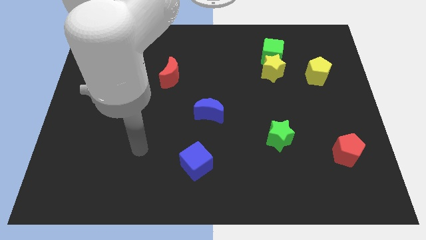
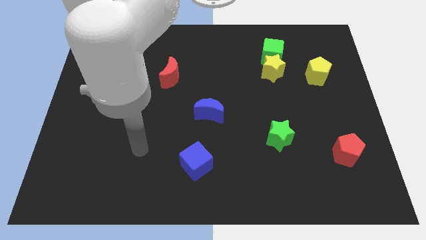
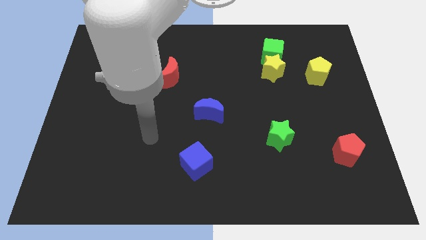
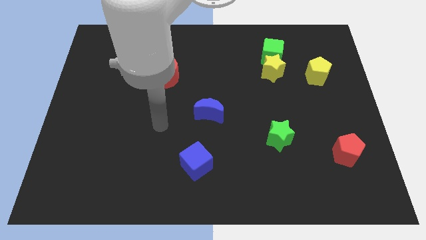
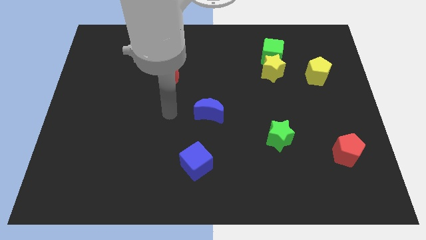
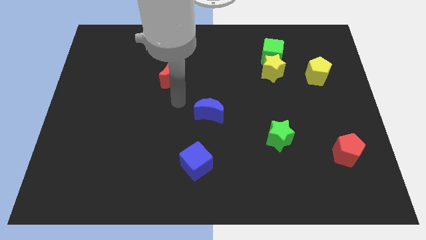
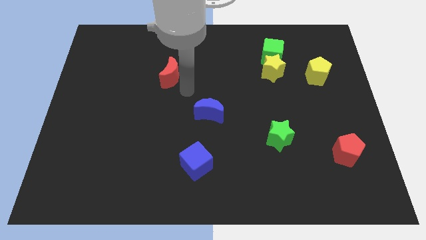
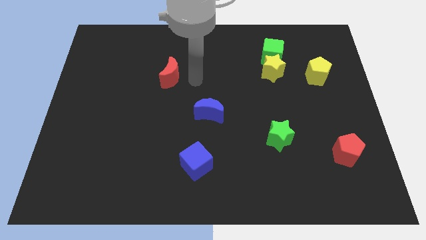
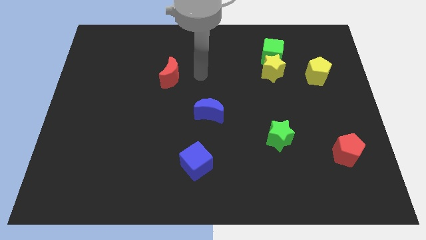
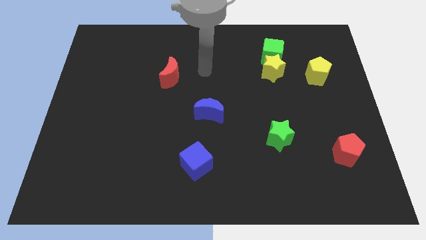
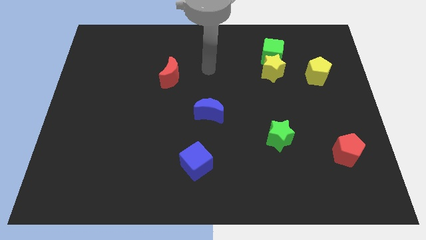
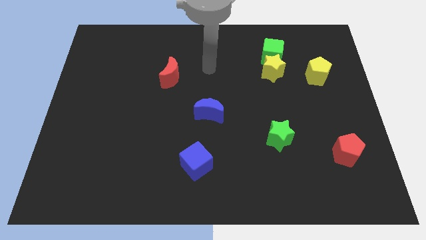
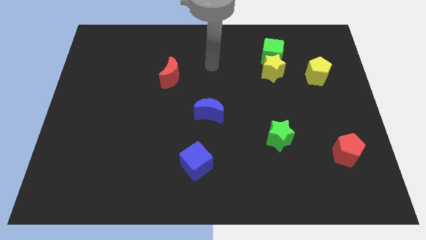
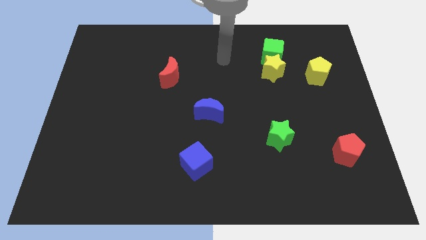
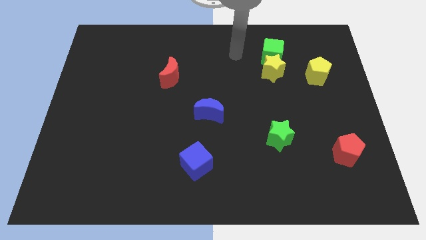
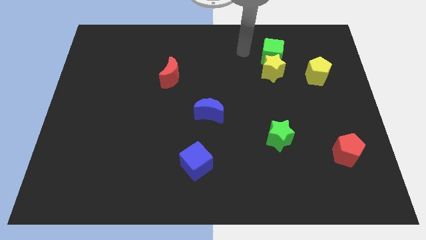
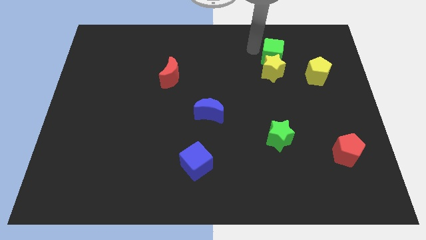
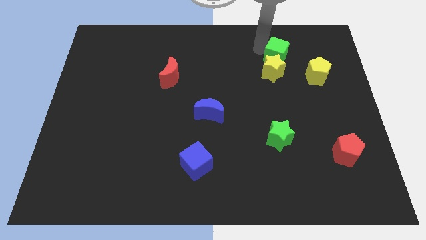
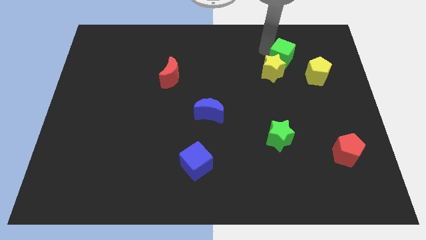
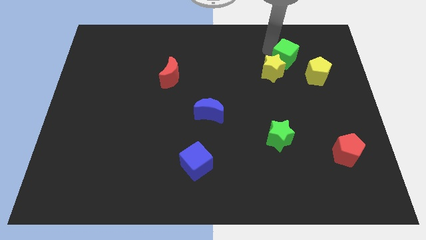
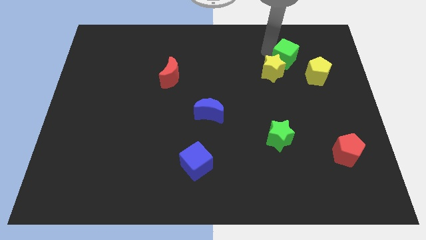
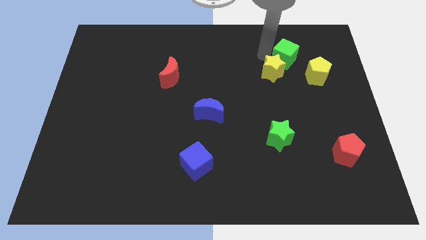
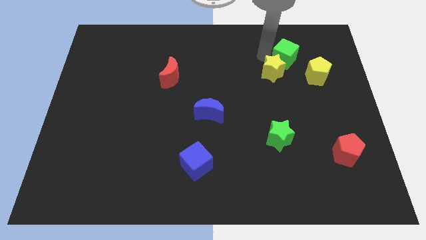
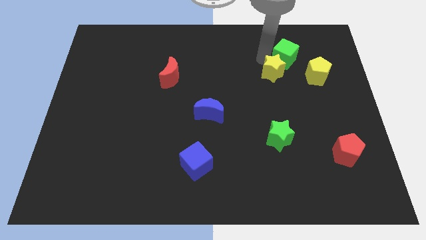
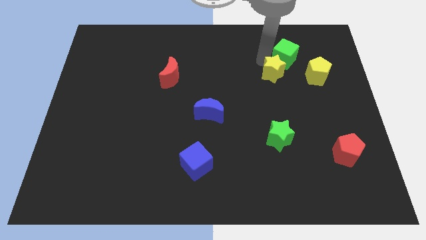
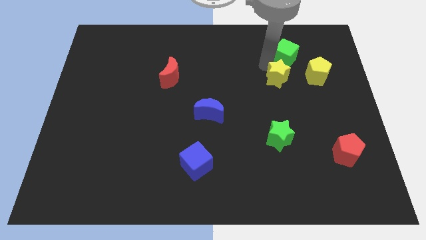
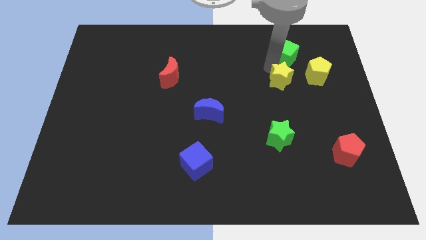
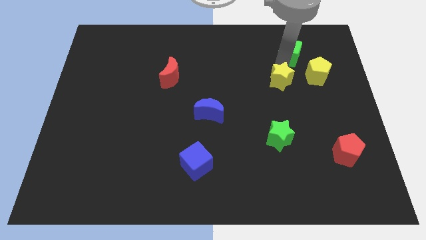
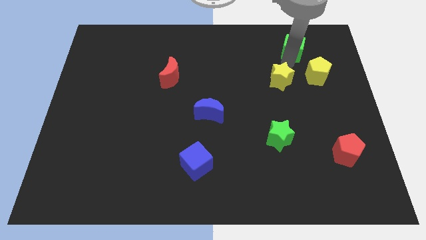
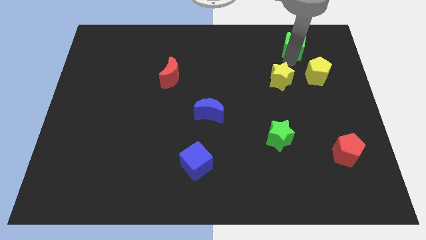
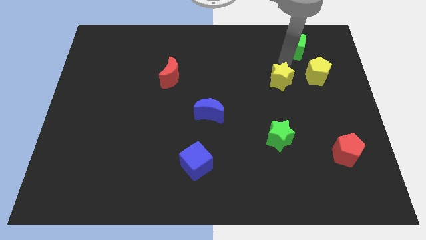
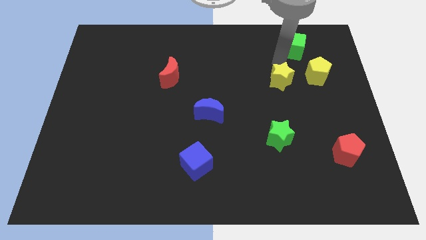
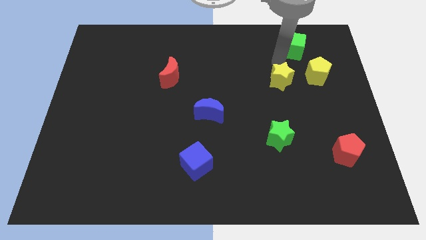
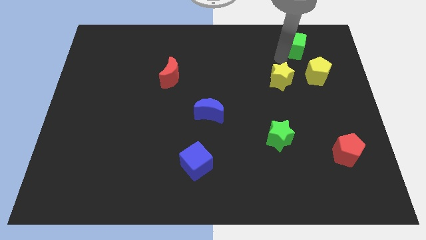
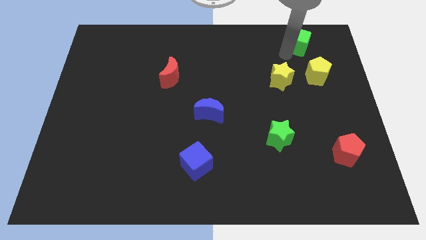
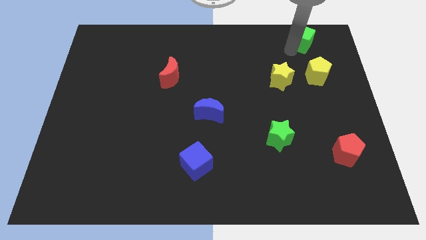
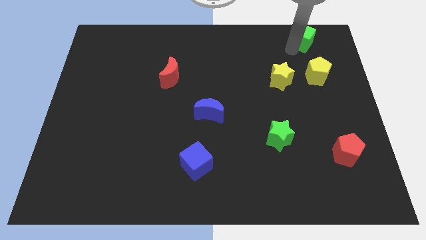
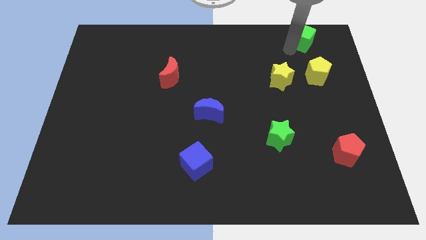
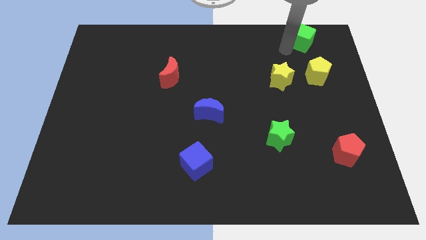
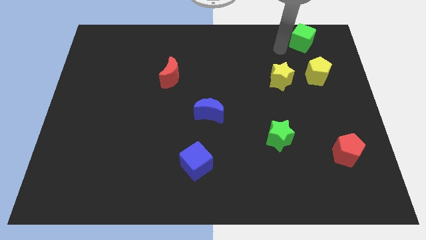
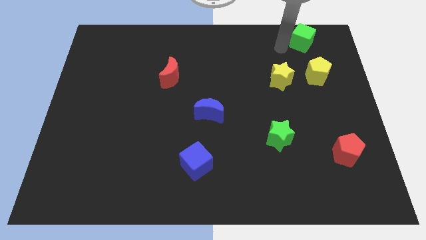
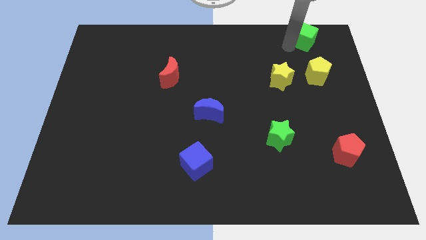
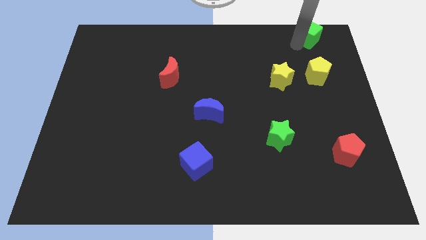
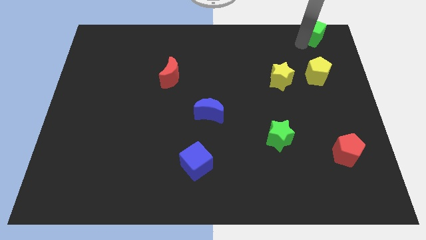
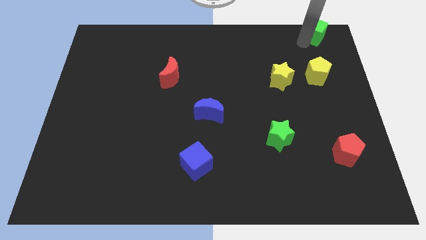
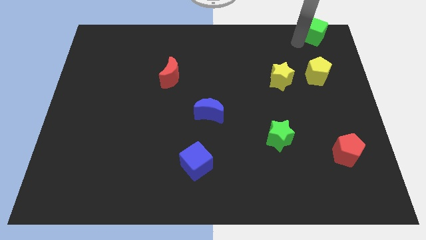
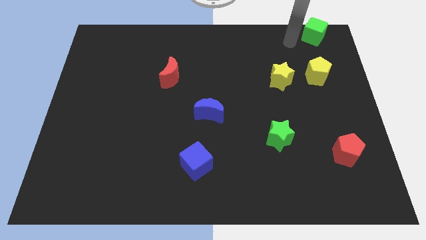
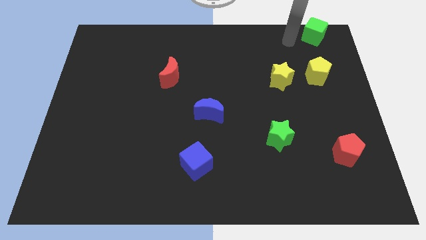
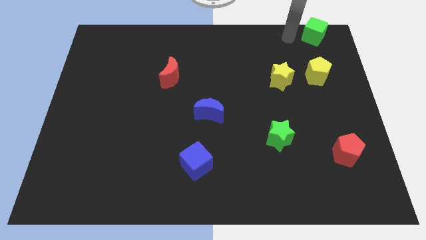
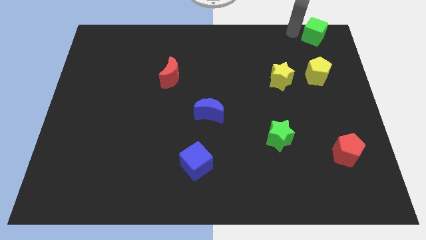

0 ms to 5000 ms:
push the green cube to the right top corner

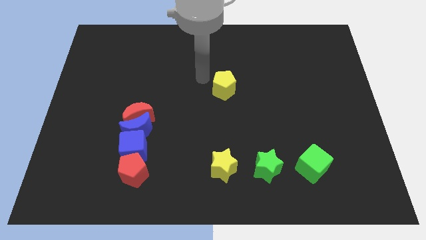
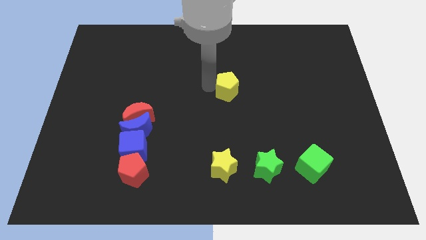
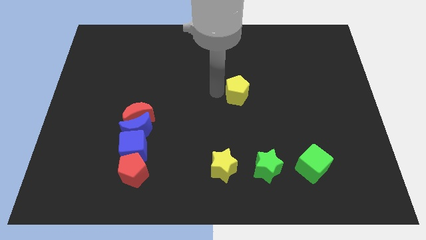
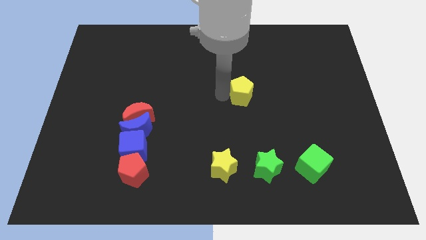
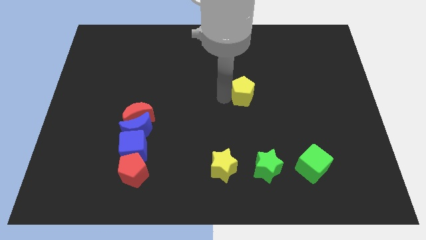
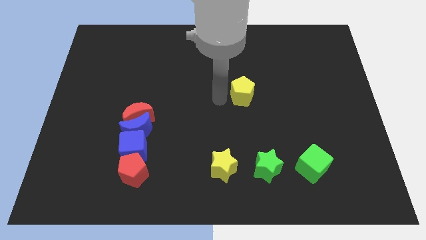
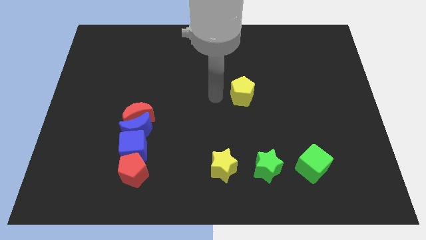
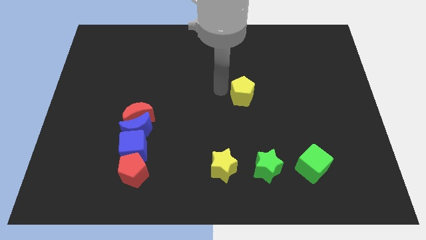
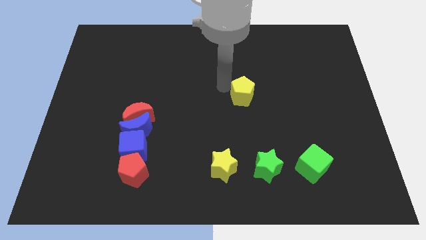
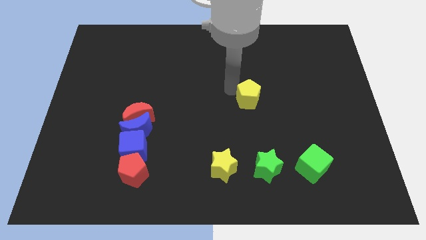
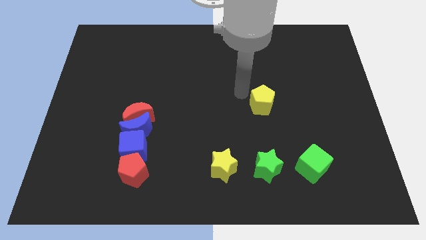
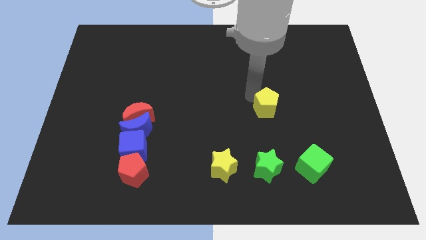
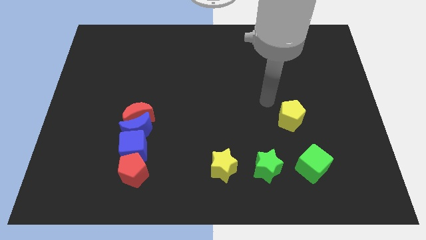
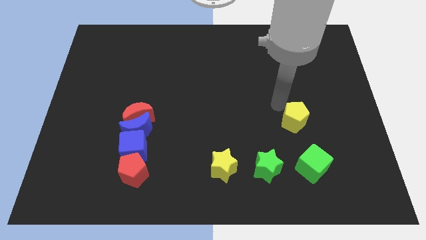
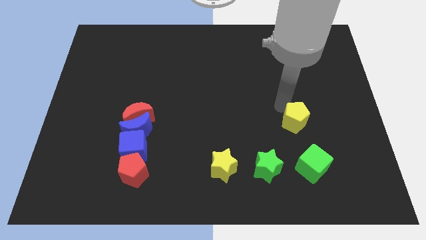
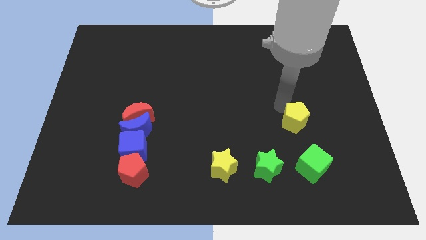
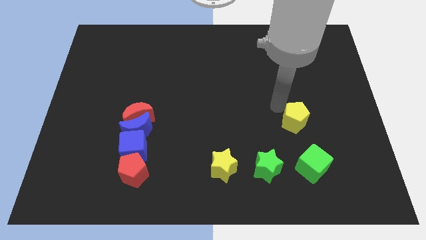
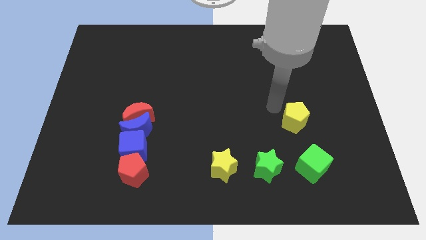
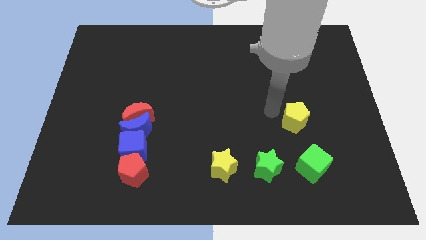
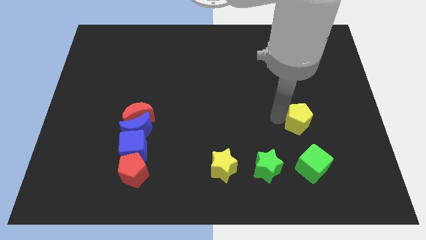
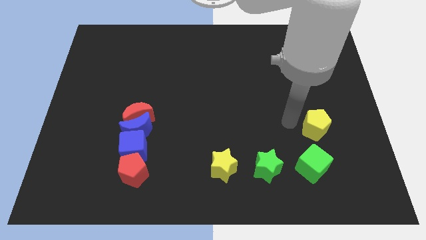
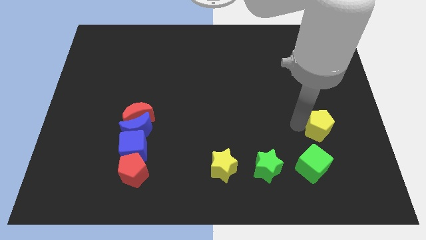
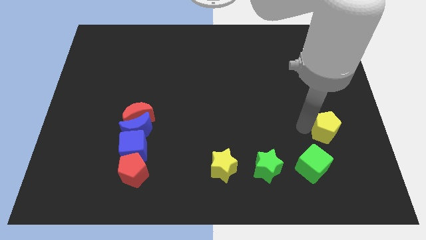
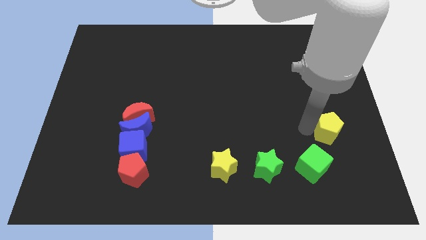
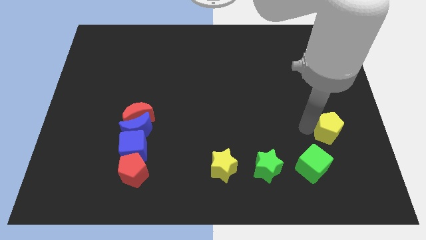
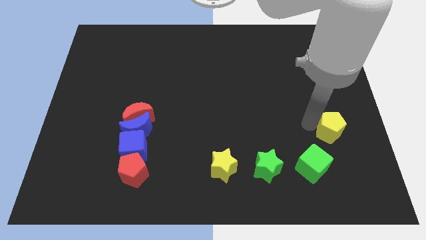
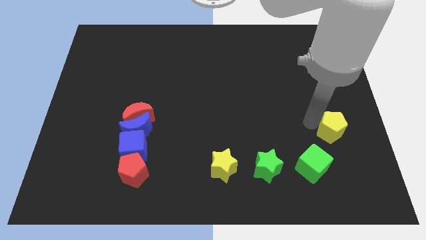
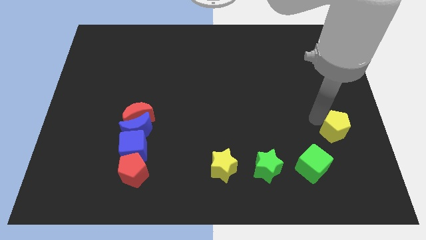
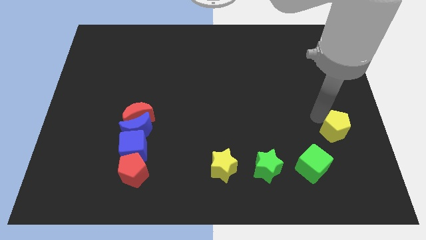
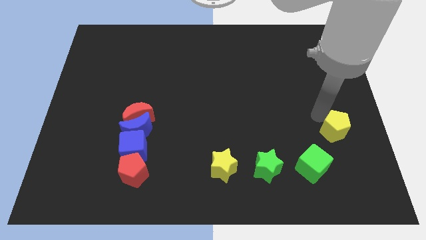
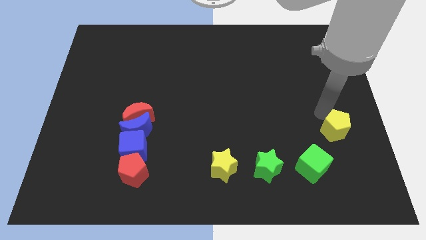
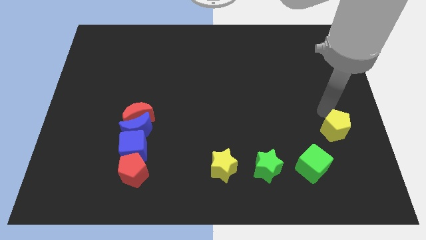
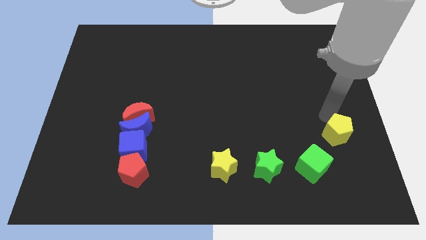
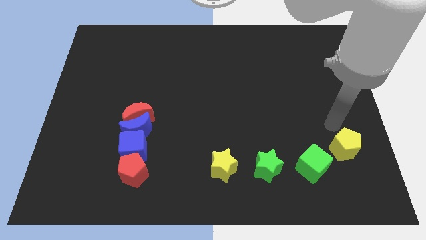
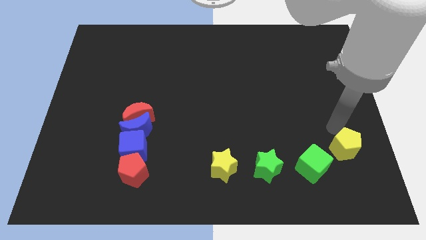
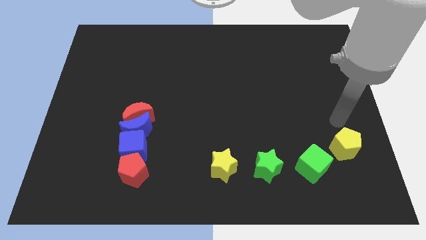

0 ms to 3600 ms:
slide the yellow pentagon to the top right side of the green cube

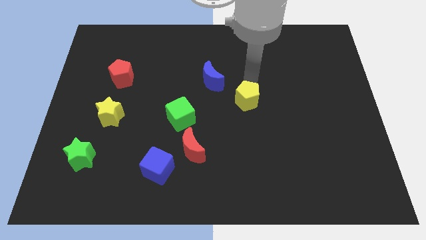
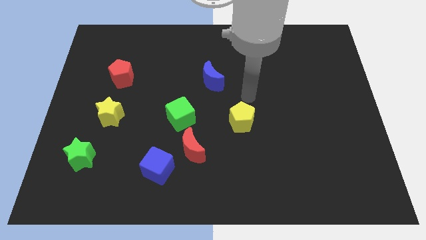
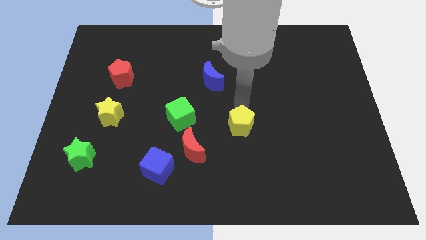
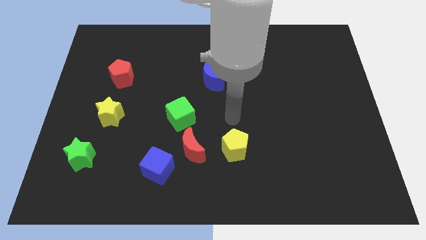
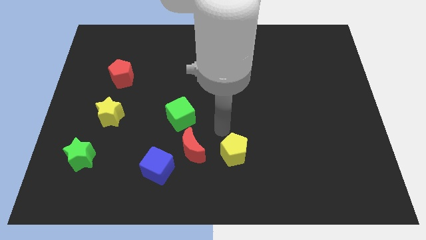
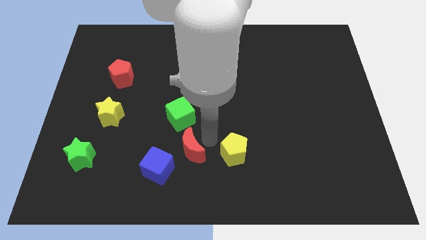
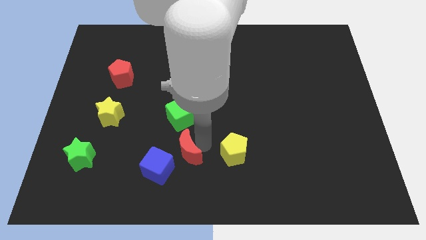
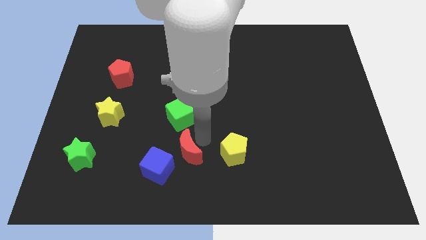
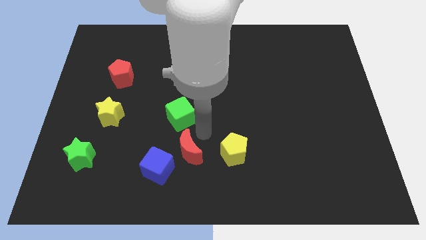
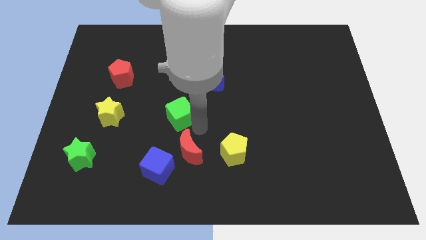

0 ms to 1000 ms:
move the yellow pentagon to the right of the red moon
